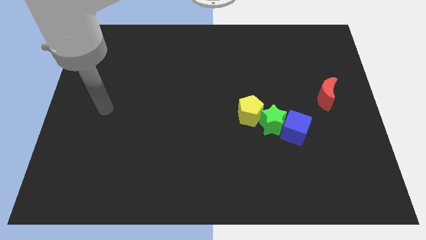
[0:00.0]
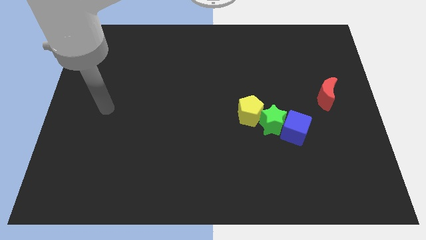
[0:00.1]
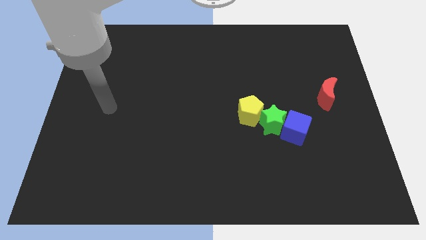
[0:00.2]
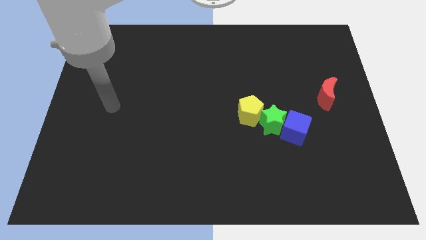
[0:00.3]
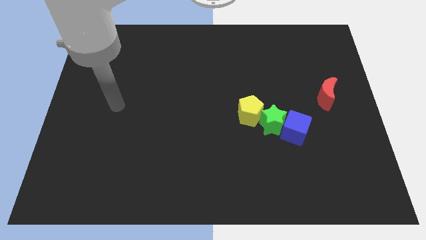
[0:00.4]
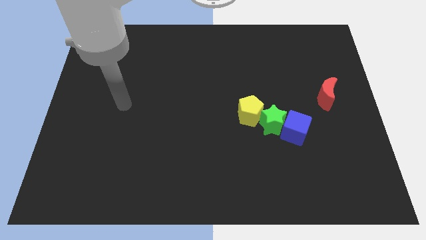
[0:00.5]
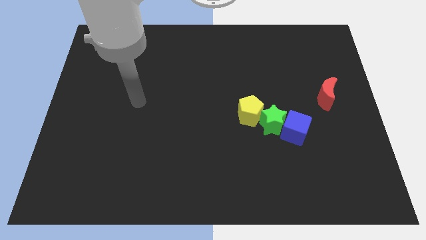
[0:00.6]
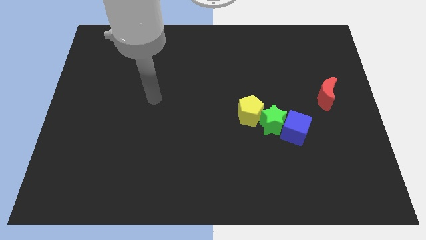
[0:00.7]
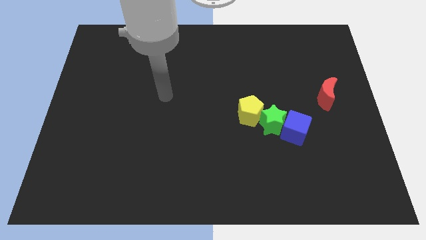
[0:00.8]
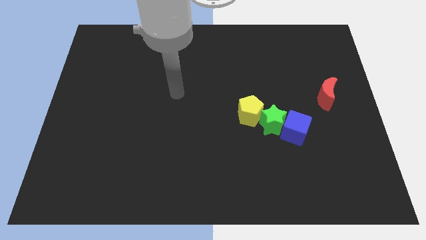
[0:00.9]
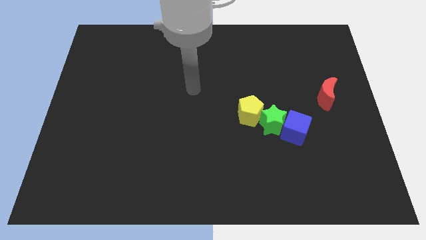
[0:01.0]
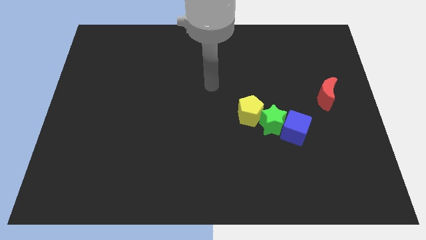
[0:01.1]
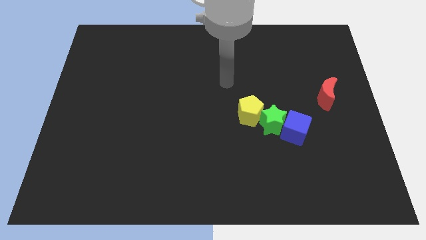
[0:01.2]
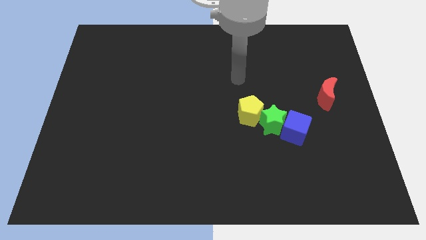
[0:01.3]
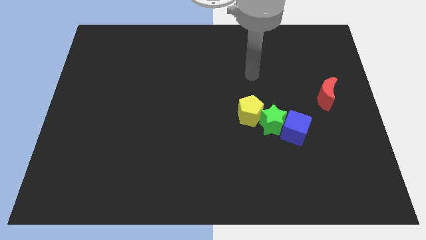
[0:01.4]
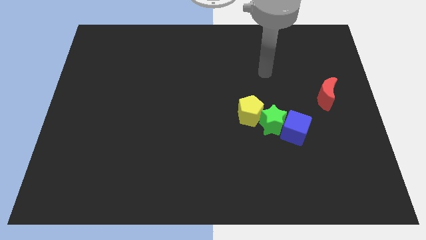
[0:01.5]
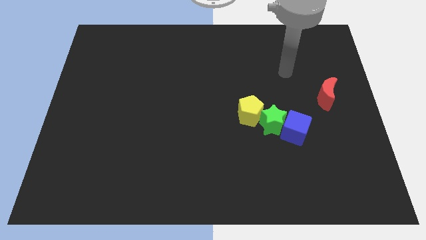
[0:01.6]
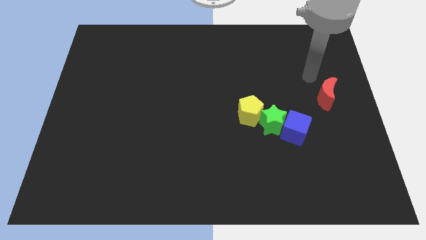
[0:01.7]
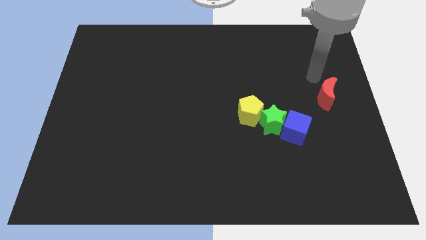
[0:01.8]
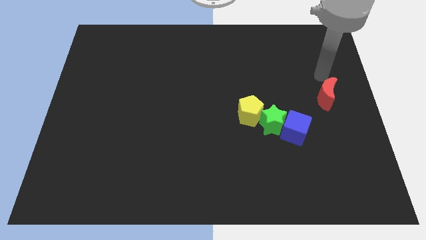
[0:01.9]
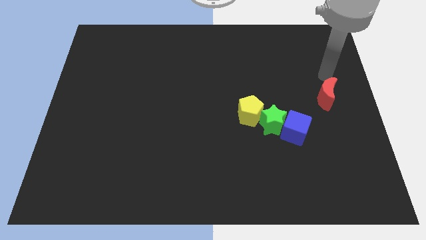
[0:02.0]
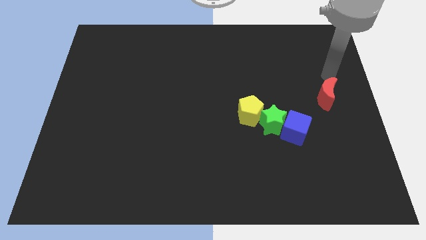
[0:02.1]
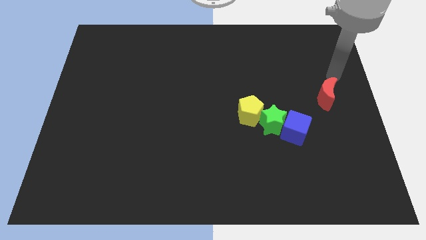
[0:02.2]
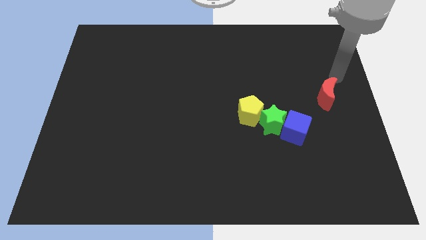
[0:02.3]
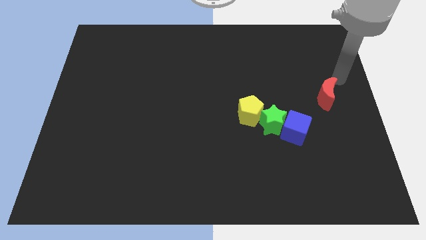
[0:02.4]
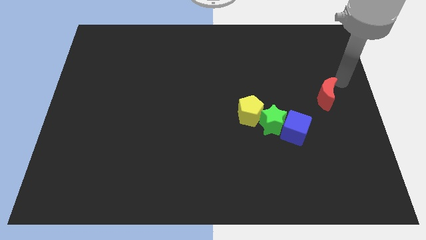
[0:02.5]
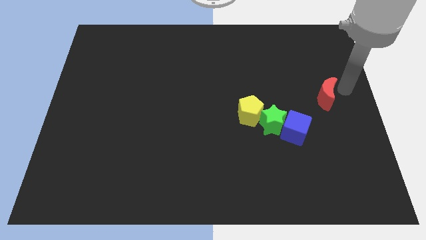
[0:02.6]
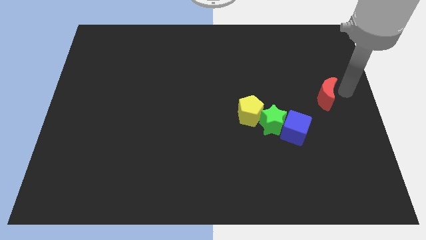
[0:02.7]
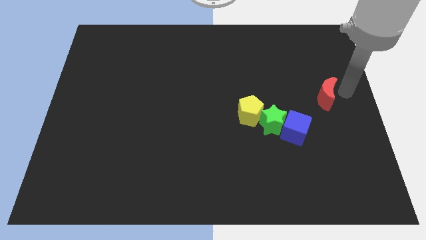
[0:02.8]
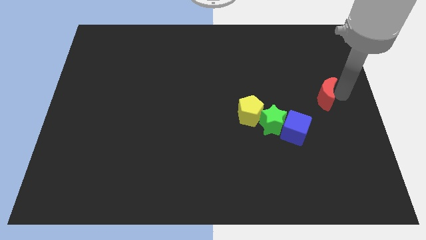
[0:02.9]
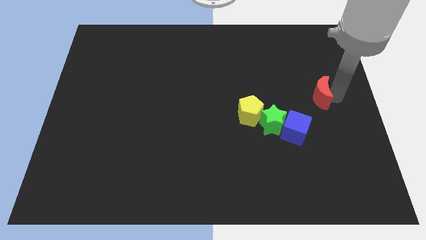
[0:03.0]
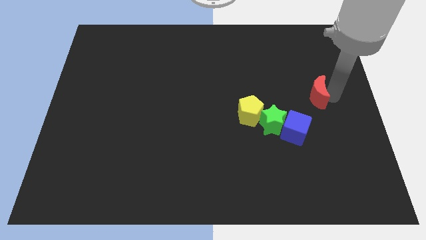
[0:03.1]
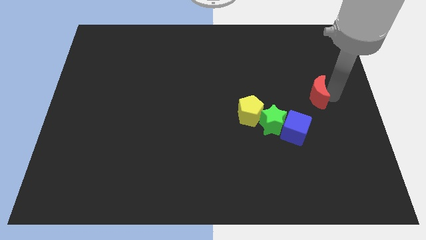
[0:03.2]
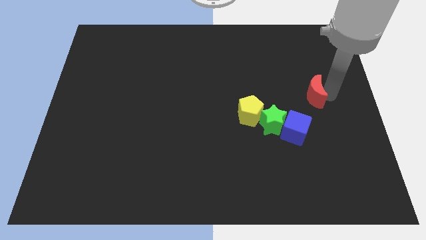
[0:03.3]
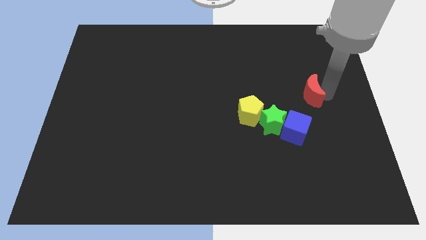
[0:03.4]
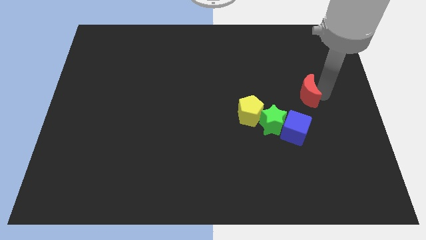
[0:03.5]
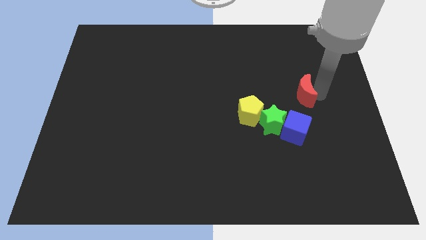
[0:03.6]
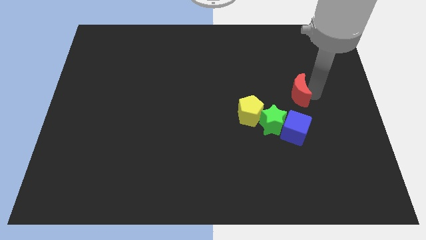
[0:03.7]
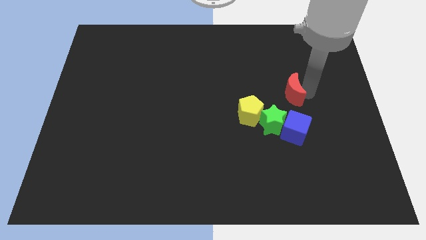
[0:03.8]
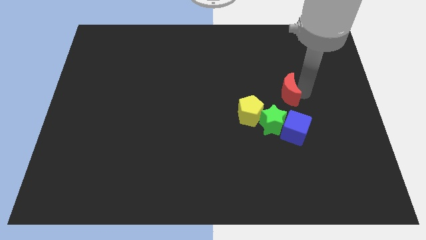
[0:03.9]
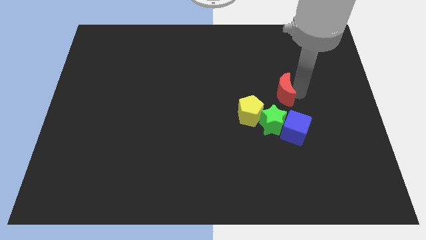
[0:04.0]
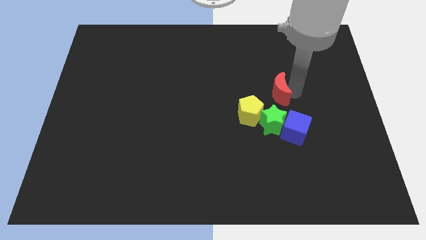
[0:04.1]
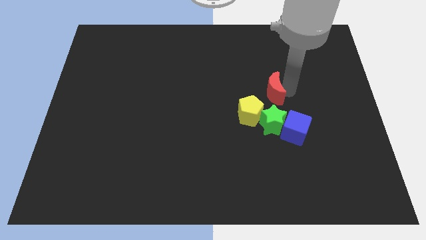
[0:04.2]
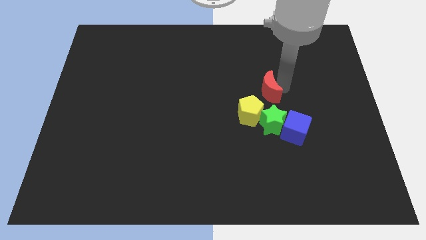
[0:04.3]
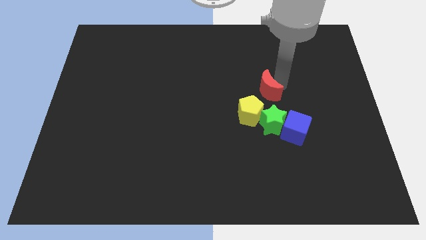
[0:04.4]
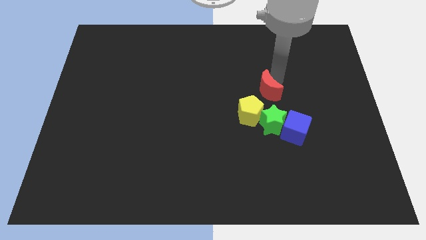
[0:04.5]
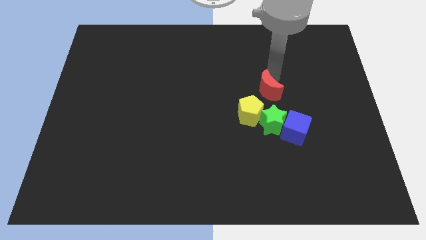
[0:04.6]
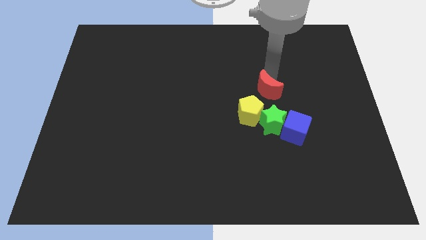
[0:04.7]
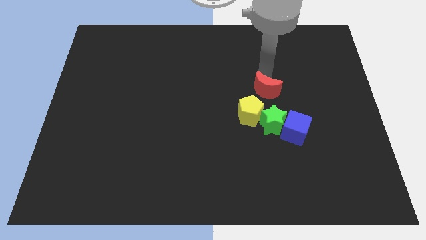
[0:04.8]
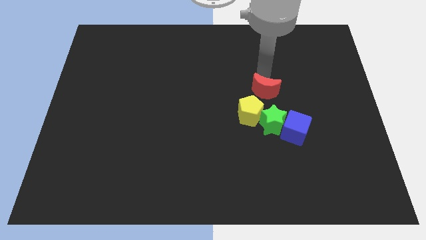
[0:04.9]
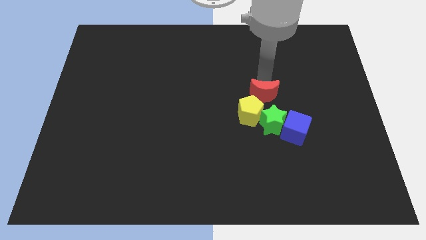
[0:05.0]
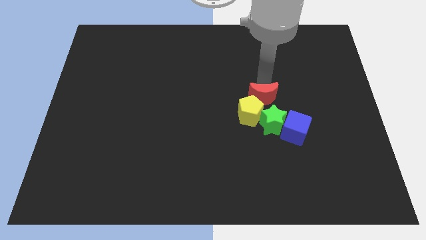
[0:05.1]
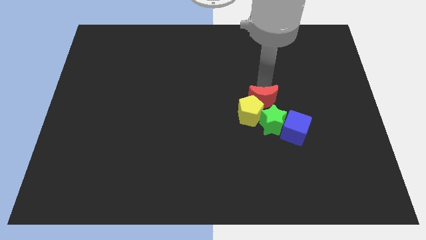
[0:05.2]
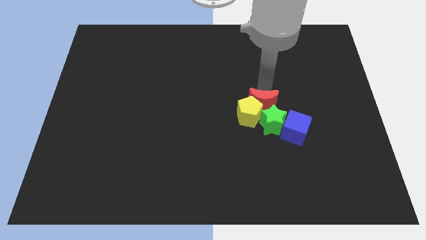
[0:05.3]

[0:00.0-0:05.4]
push the moon close to the yellow block

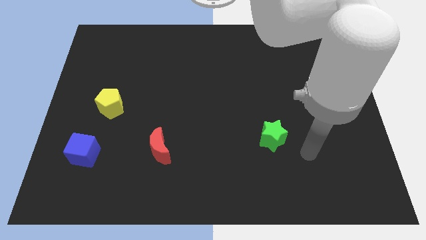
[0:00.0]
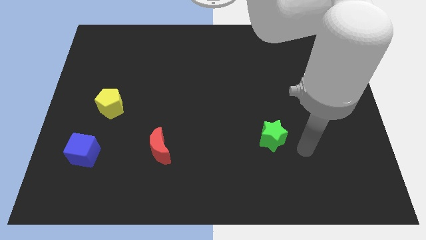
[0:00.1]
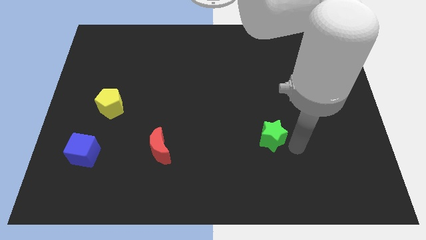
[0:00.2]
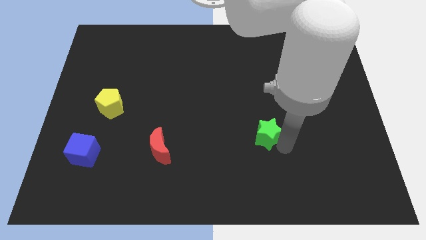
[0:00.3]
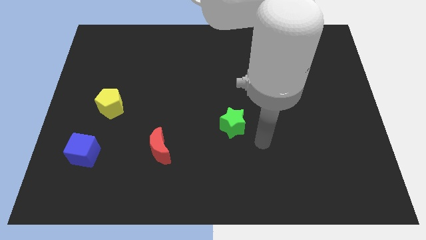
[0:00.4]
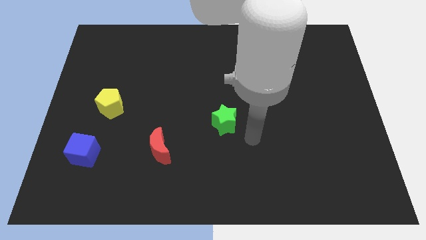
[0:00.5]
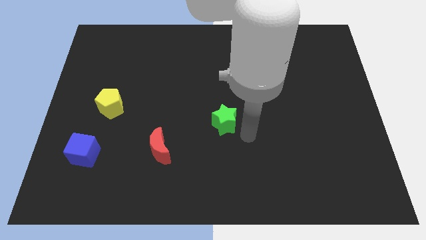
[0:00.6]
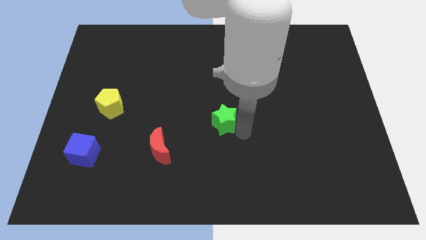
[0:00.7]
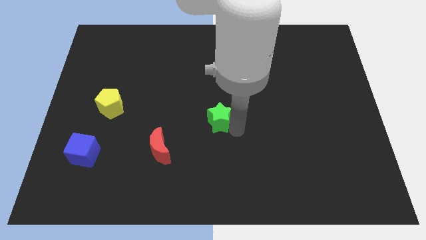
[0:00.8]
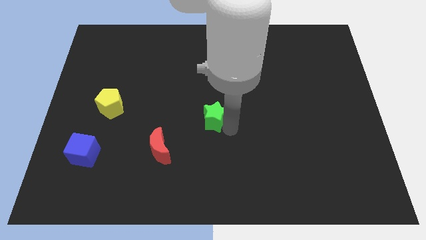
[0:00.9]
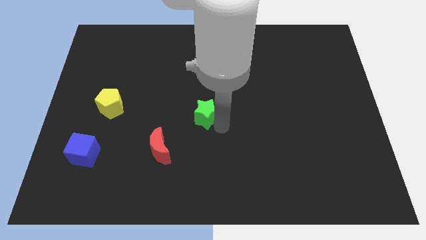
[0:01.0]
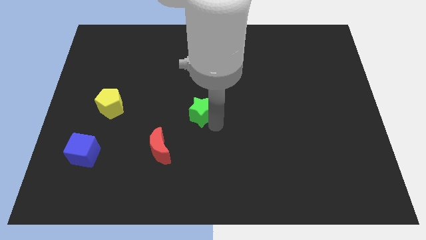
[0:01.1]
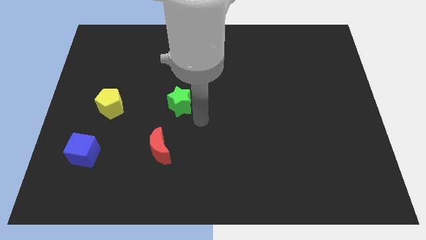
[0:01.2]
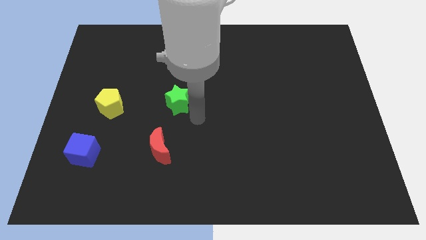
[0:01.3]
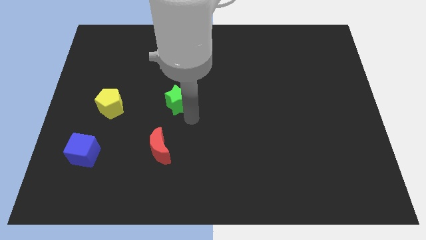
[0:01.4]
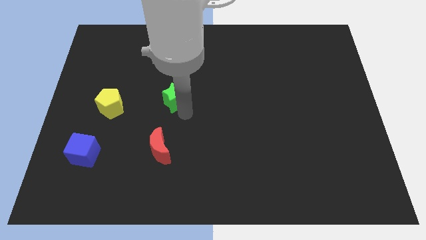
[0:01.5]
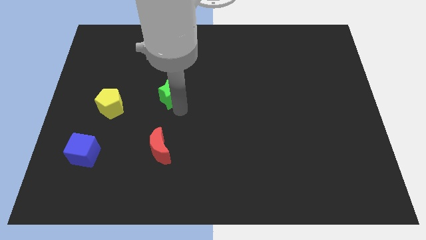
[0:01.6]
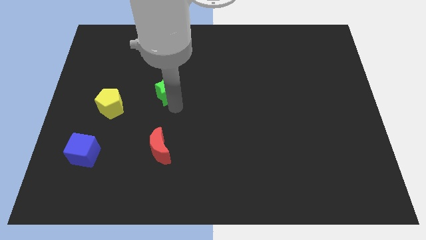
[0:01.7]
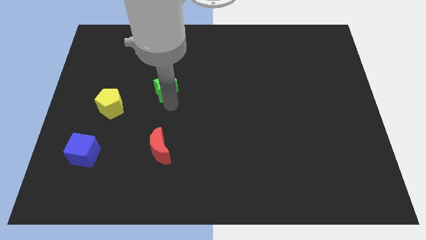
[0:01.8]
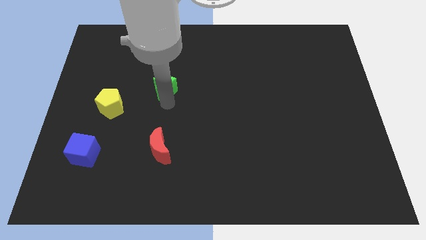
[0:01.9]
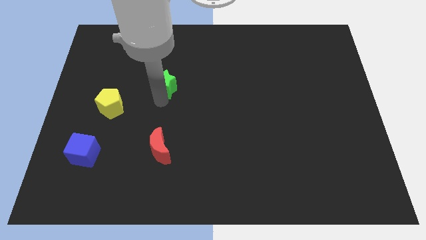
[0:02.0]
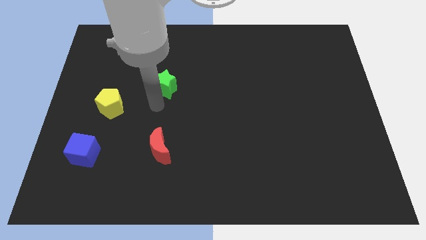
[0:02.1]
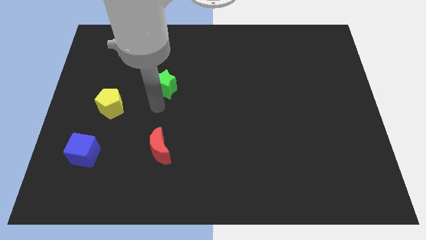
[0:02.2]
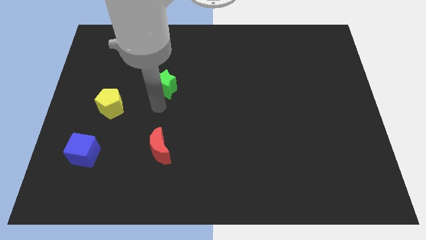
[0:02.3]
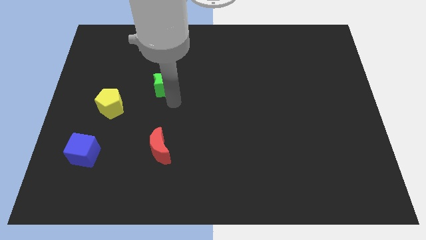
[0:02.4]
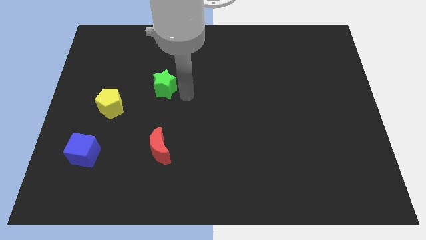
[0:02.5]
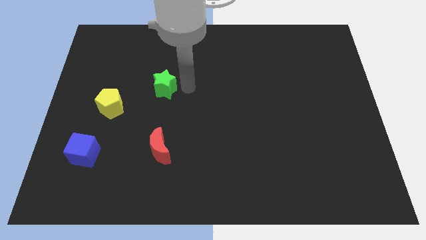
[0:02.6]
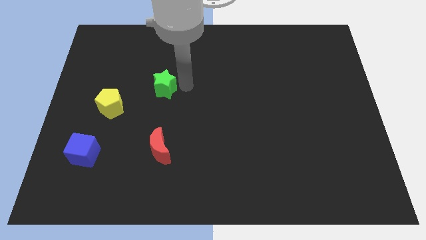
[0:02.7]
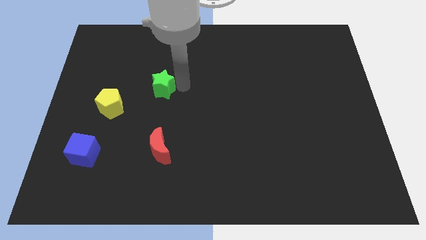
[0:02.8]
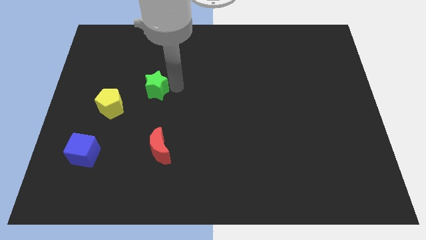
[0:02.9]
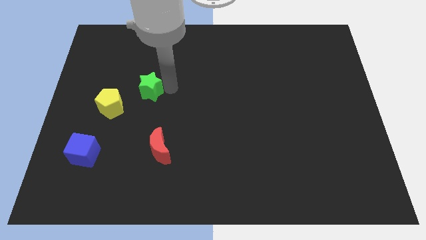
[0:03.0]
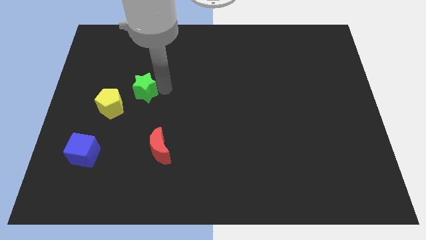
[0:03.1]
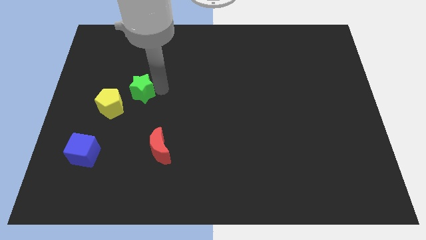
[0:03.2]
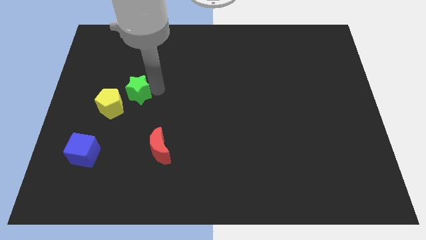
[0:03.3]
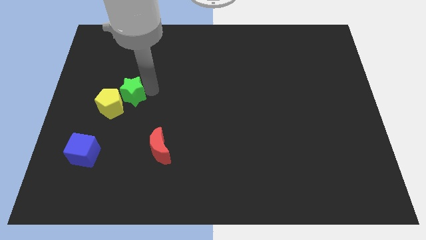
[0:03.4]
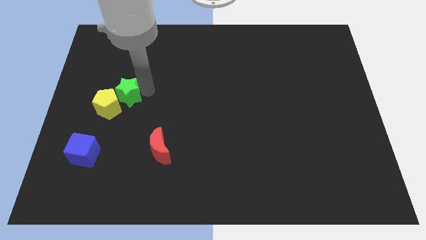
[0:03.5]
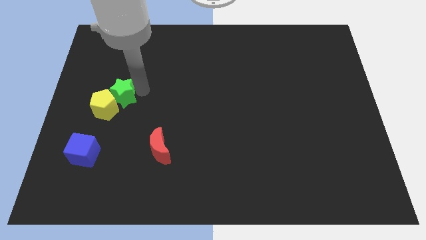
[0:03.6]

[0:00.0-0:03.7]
move the star to the yellow pentagon
